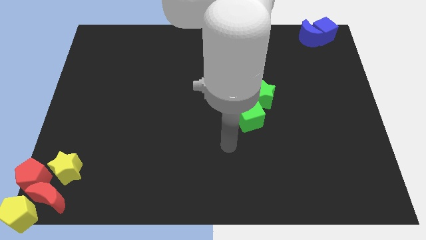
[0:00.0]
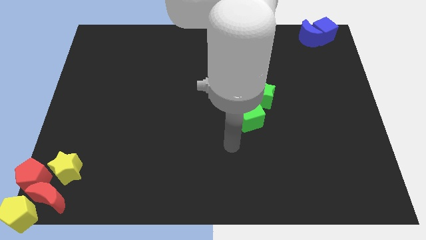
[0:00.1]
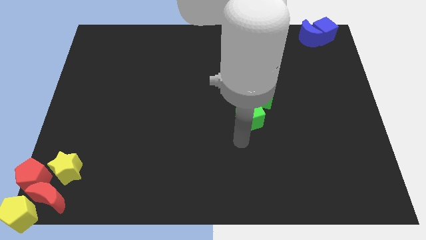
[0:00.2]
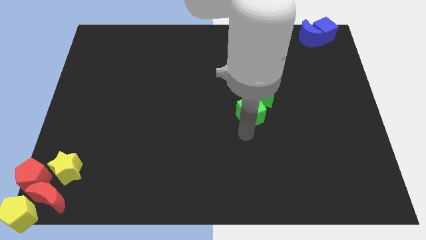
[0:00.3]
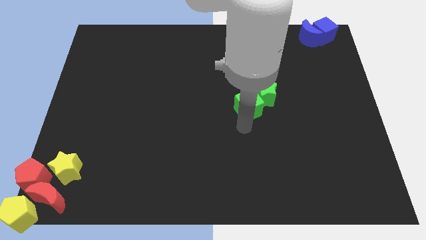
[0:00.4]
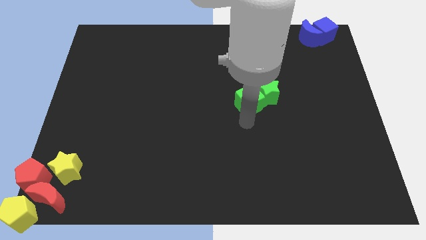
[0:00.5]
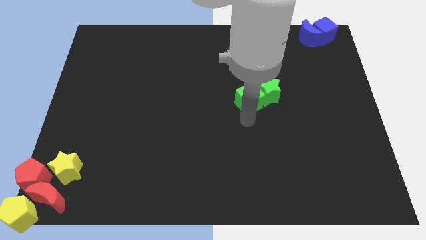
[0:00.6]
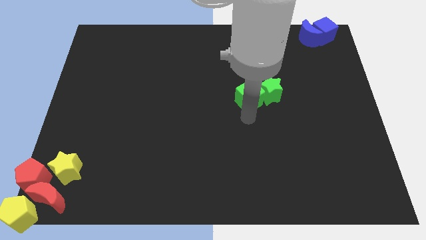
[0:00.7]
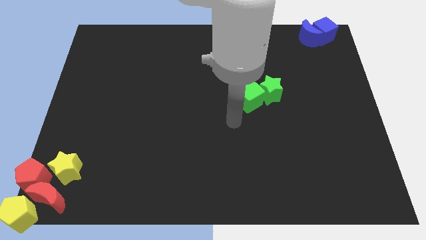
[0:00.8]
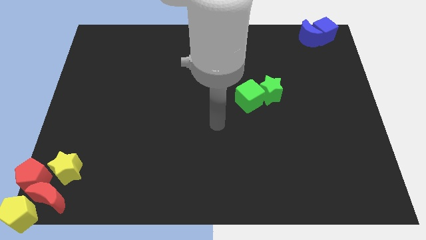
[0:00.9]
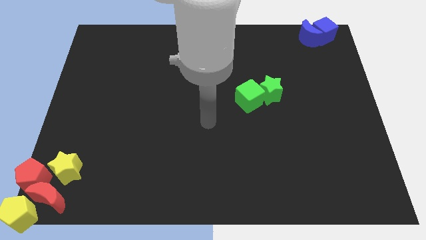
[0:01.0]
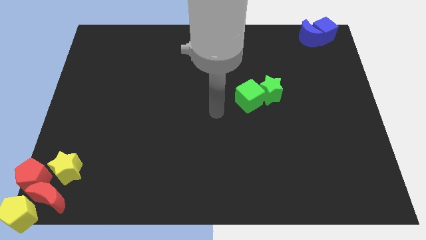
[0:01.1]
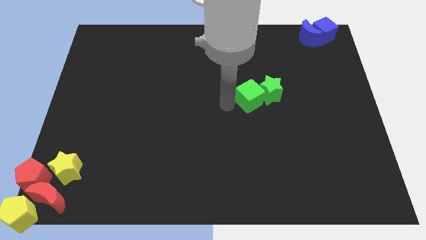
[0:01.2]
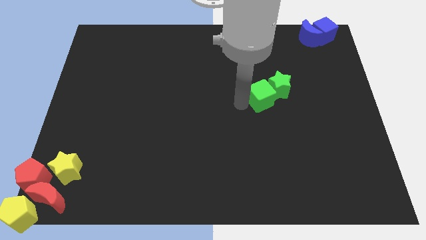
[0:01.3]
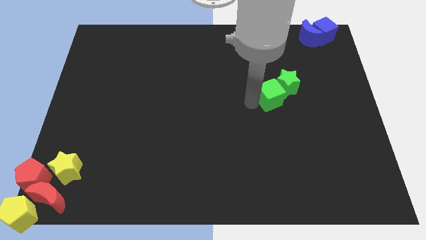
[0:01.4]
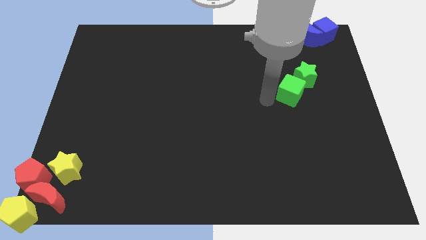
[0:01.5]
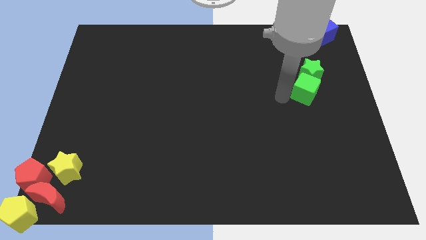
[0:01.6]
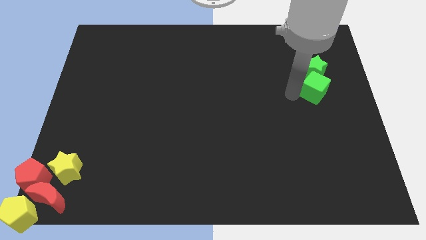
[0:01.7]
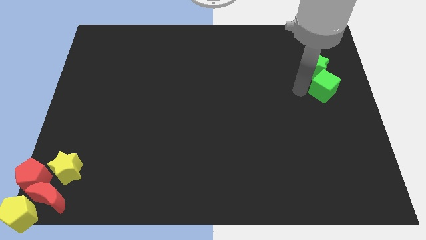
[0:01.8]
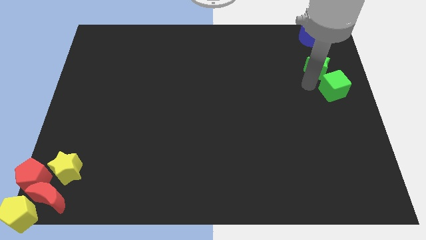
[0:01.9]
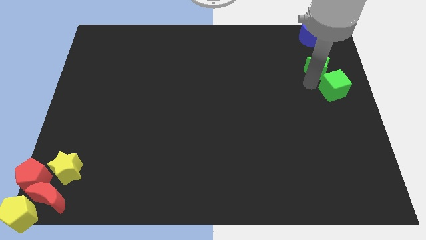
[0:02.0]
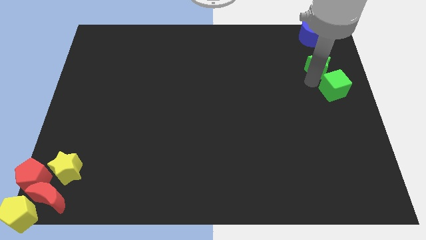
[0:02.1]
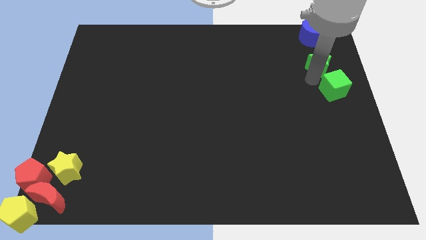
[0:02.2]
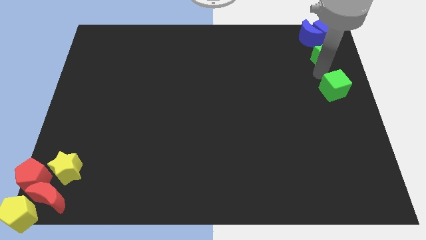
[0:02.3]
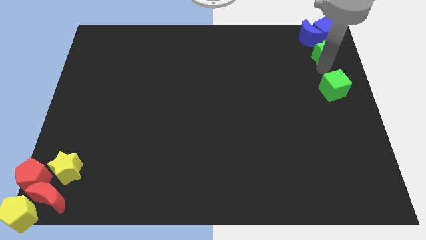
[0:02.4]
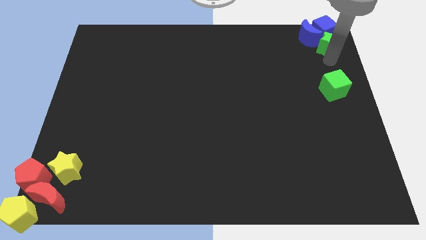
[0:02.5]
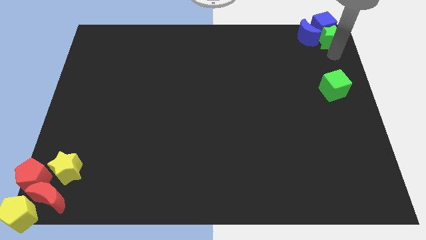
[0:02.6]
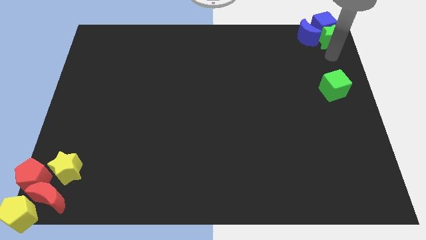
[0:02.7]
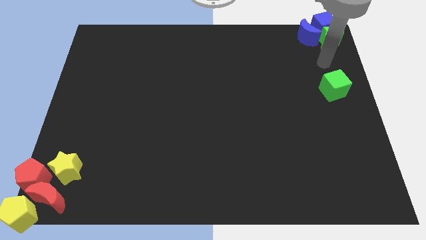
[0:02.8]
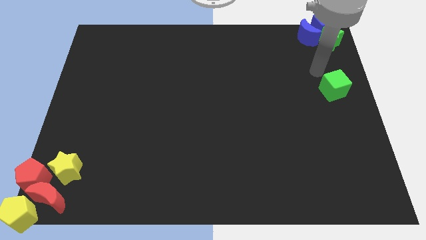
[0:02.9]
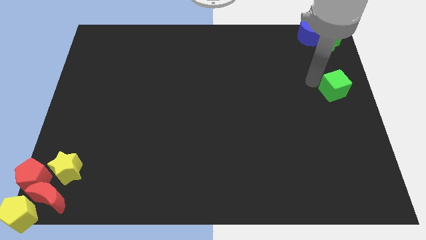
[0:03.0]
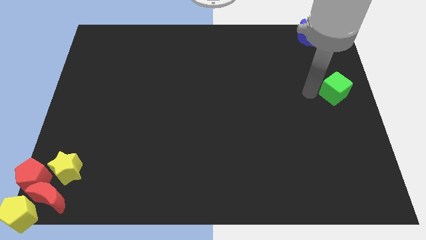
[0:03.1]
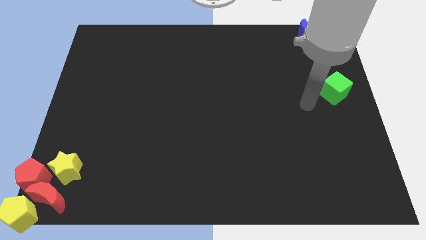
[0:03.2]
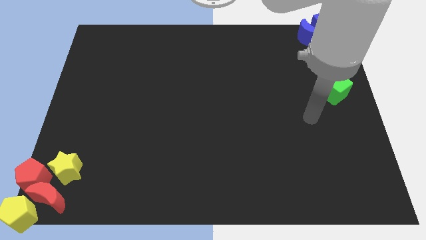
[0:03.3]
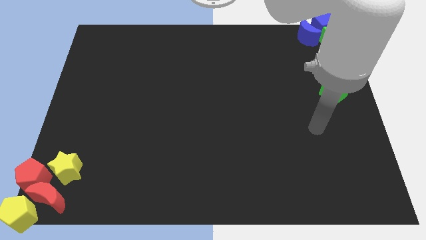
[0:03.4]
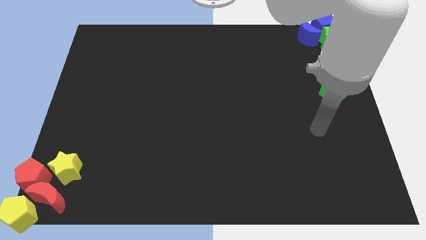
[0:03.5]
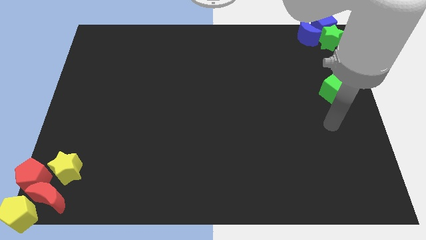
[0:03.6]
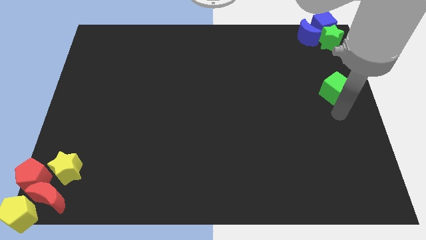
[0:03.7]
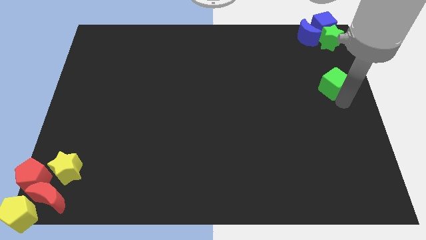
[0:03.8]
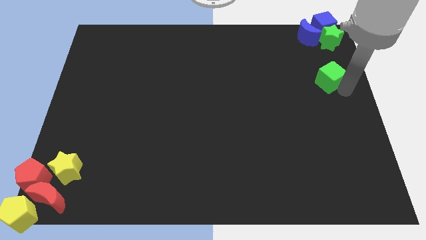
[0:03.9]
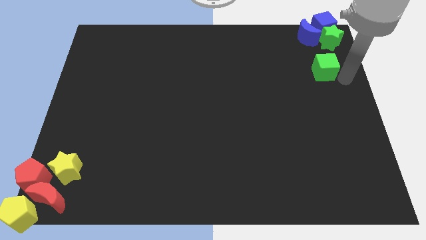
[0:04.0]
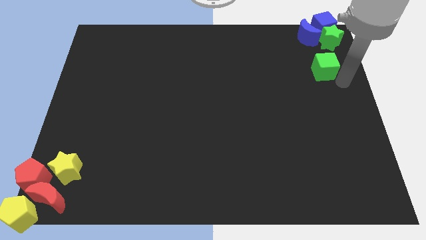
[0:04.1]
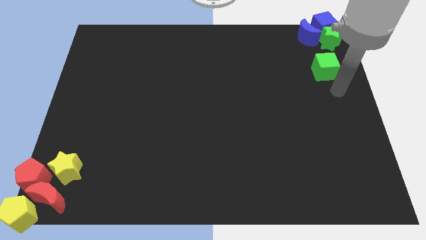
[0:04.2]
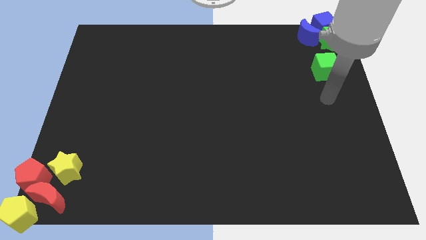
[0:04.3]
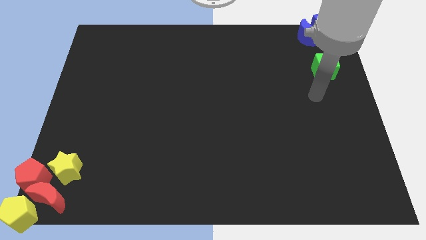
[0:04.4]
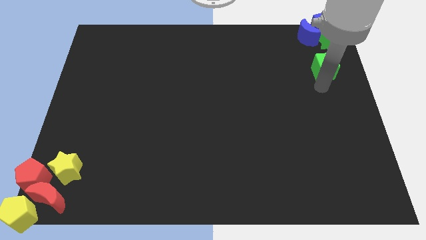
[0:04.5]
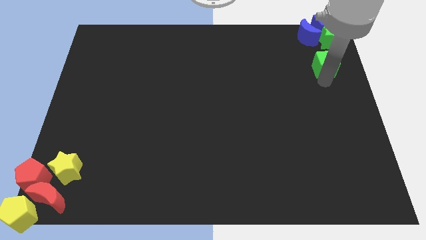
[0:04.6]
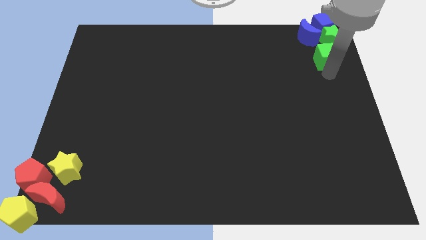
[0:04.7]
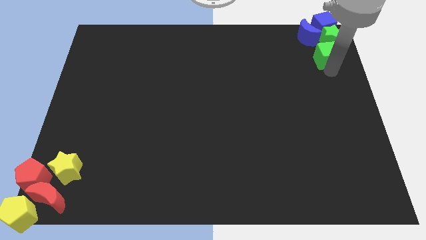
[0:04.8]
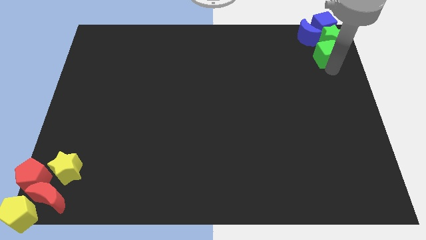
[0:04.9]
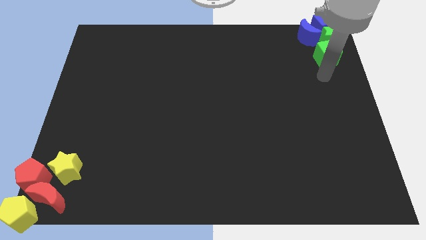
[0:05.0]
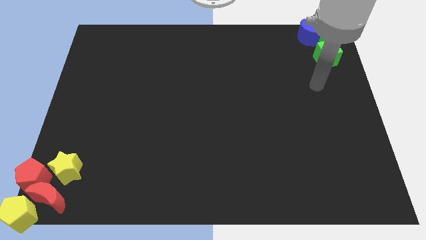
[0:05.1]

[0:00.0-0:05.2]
push the green blocks to the top right corner together

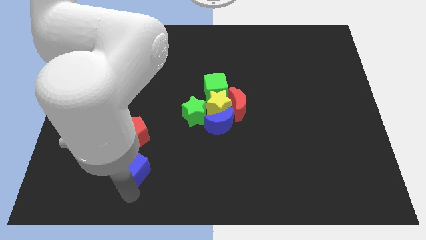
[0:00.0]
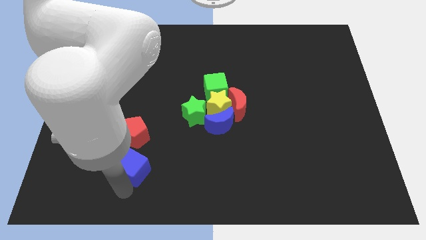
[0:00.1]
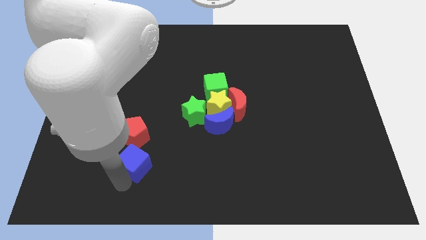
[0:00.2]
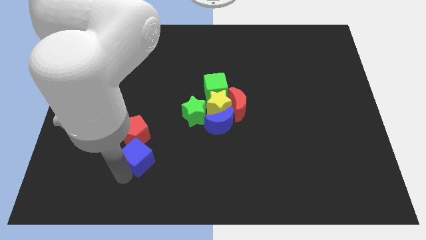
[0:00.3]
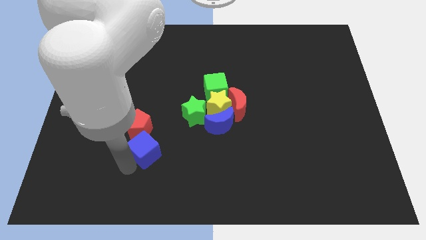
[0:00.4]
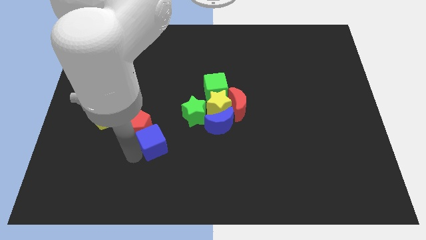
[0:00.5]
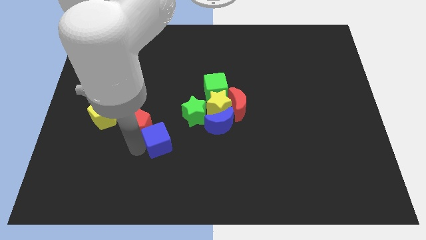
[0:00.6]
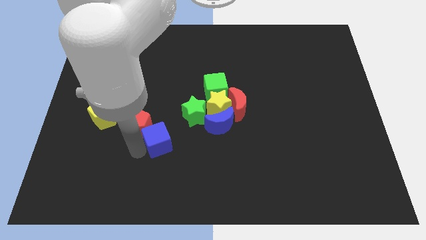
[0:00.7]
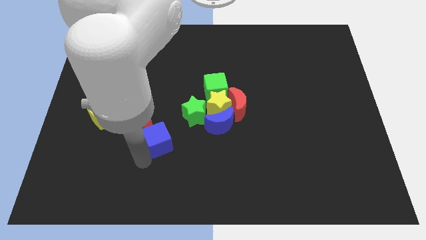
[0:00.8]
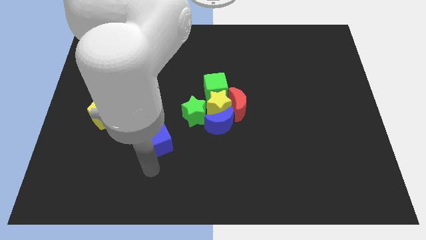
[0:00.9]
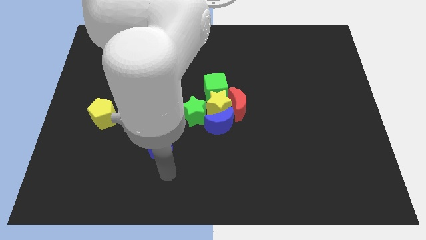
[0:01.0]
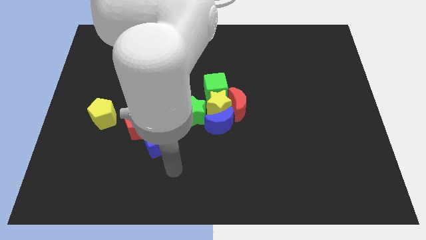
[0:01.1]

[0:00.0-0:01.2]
push the blue cube into the red pentagon

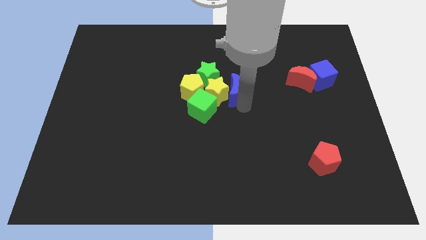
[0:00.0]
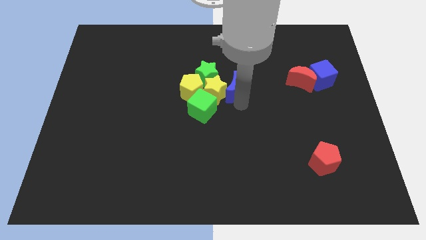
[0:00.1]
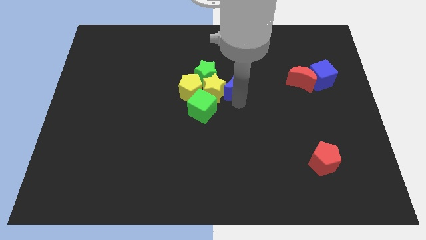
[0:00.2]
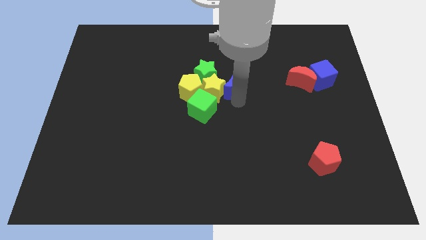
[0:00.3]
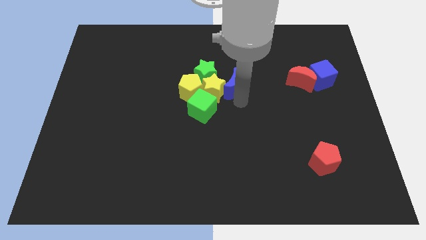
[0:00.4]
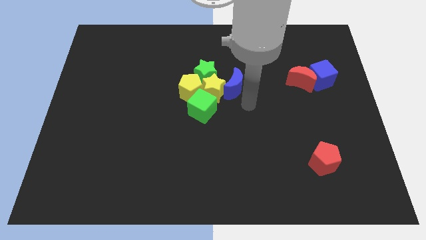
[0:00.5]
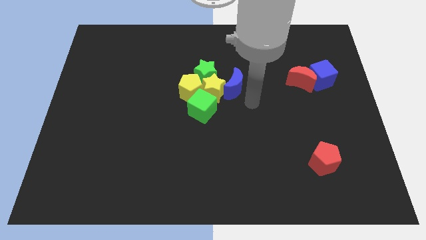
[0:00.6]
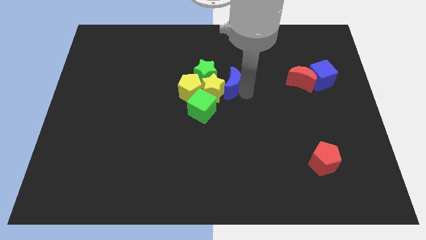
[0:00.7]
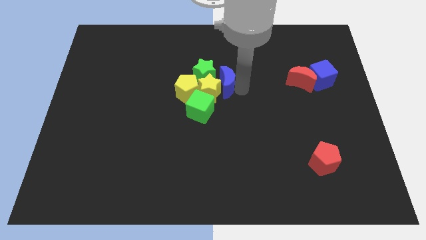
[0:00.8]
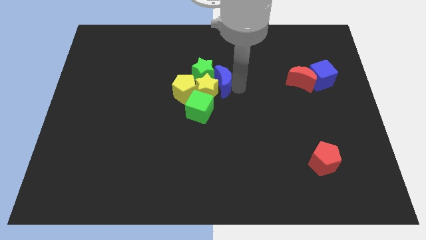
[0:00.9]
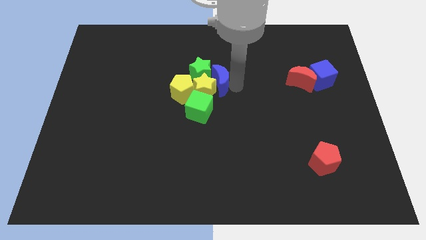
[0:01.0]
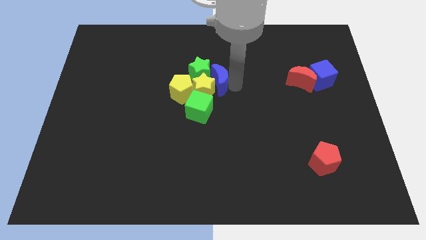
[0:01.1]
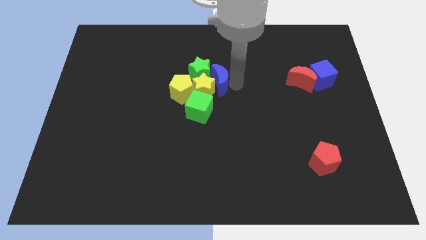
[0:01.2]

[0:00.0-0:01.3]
push the group of blocks slightly to the left side

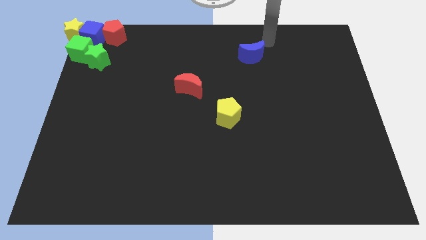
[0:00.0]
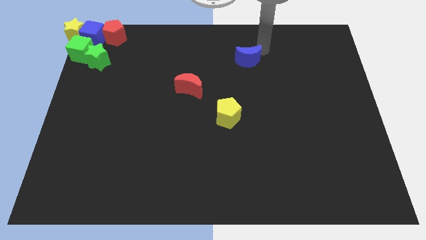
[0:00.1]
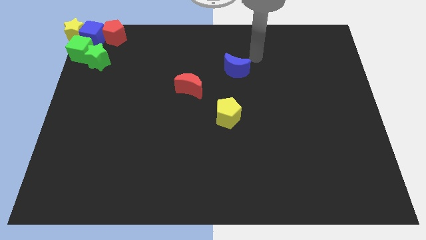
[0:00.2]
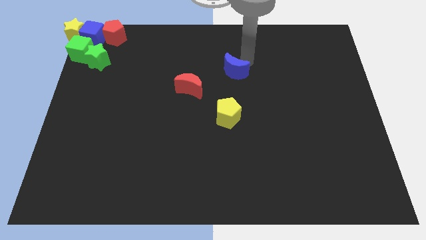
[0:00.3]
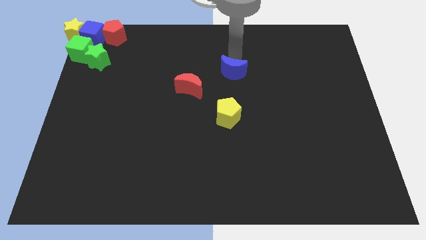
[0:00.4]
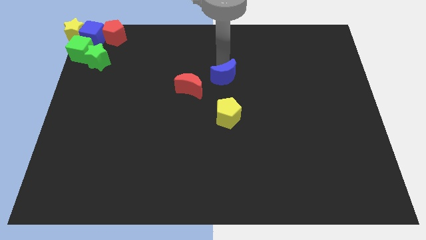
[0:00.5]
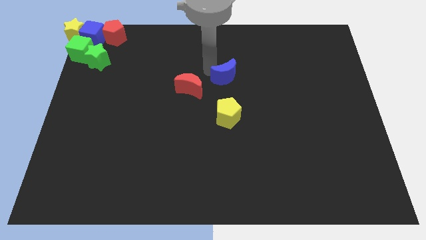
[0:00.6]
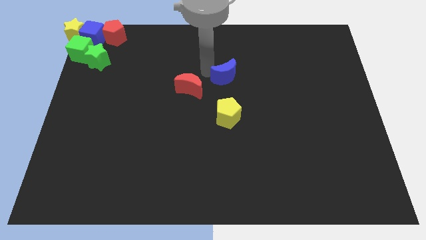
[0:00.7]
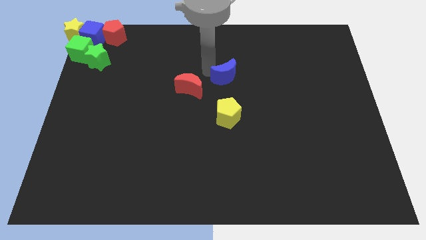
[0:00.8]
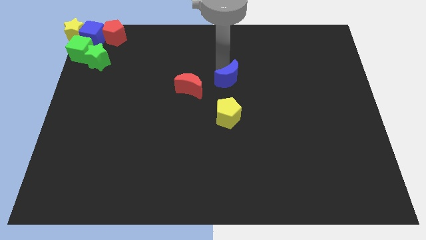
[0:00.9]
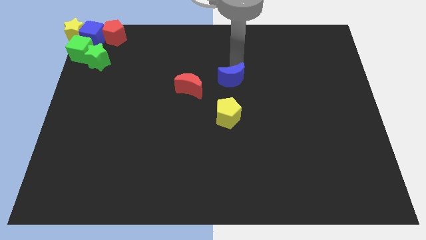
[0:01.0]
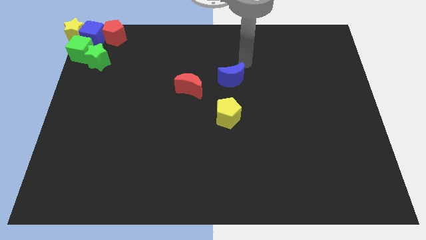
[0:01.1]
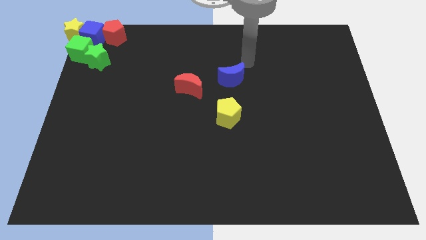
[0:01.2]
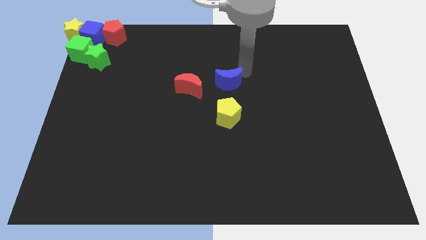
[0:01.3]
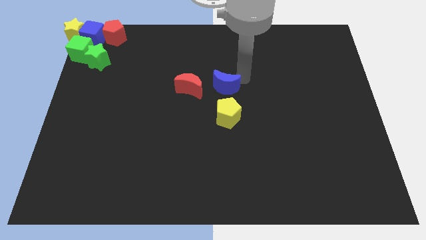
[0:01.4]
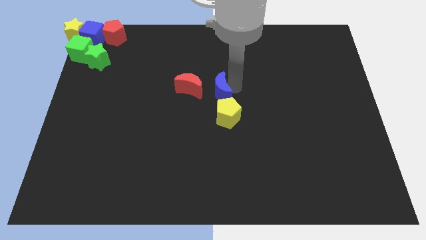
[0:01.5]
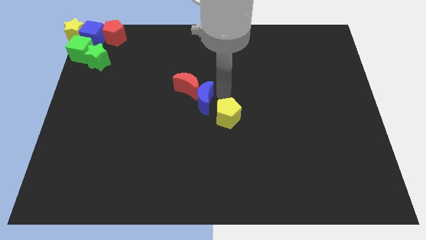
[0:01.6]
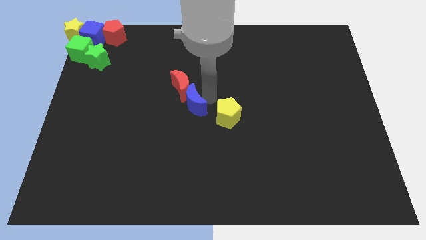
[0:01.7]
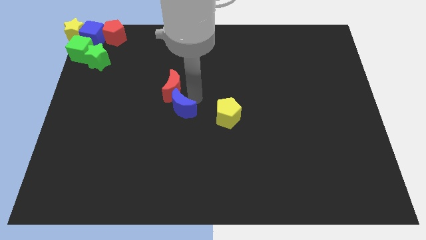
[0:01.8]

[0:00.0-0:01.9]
place the blue crescent in between red crescent and yellow pentagon
